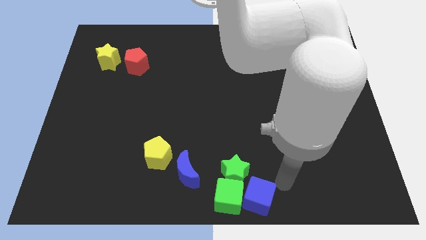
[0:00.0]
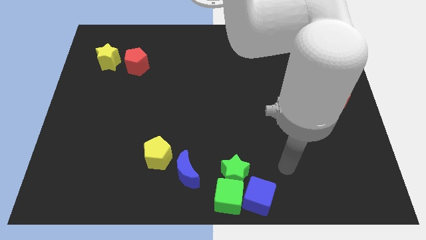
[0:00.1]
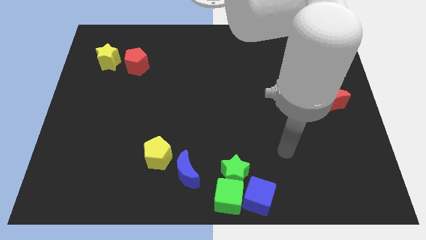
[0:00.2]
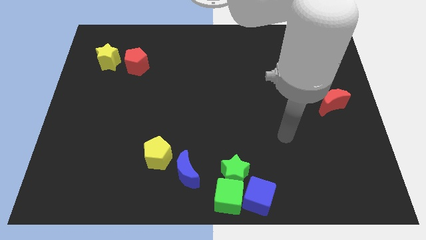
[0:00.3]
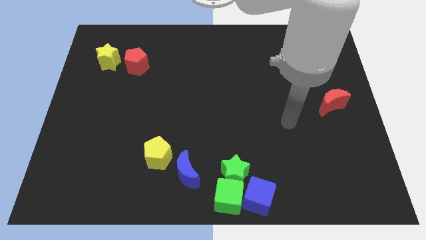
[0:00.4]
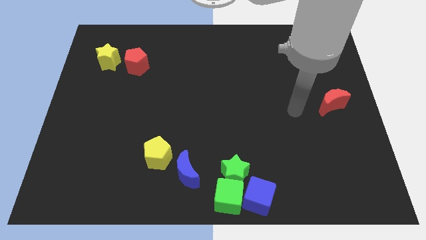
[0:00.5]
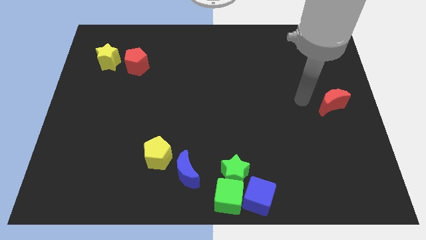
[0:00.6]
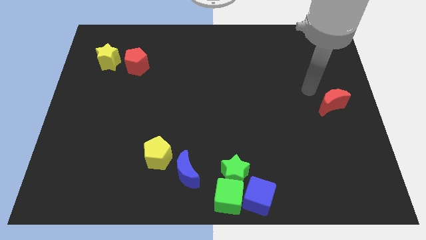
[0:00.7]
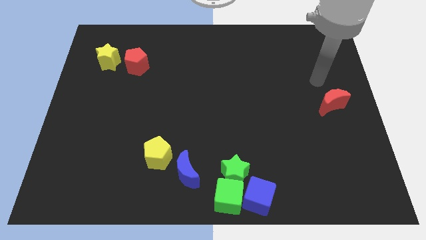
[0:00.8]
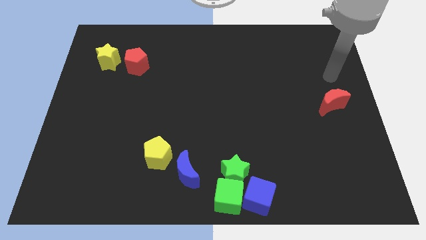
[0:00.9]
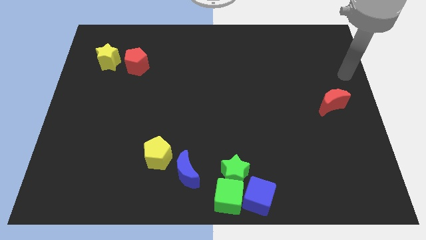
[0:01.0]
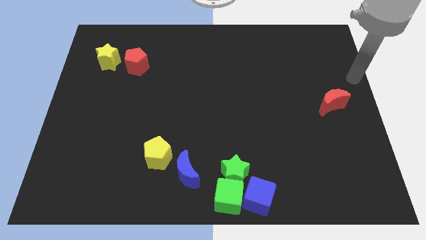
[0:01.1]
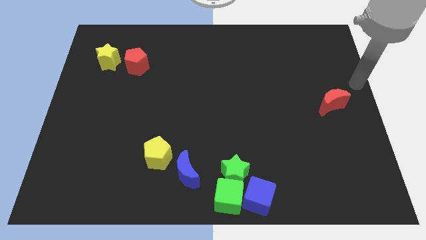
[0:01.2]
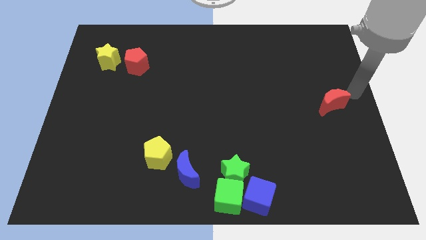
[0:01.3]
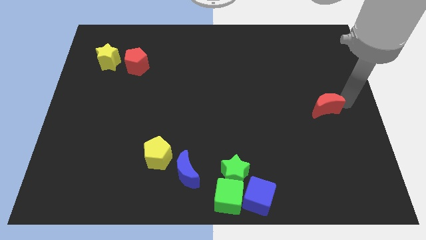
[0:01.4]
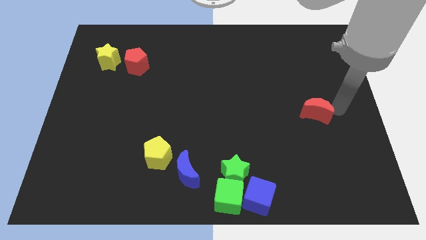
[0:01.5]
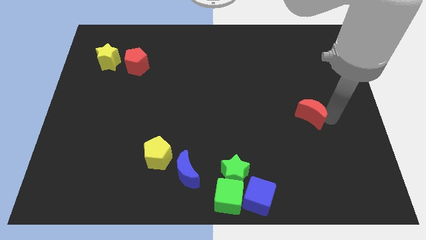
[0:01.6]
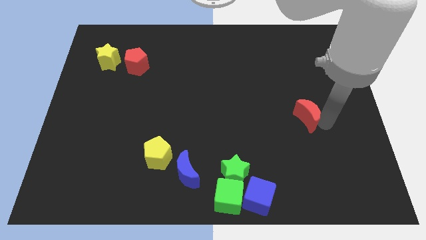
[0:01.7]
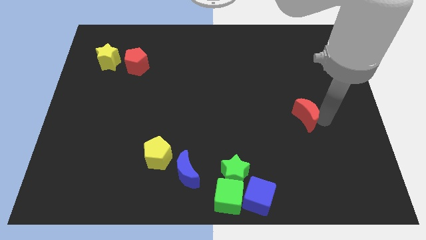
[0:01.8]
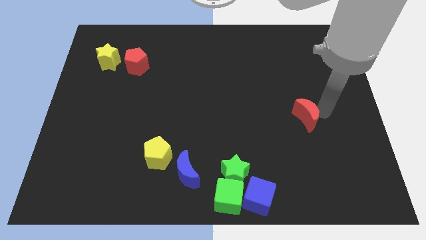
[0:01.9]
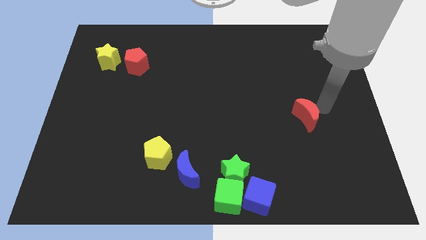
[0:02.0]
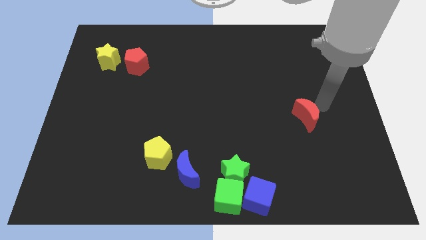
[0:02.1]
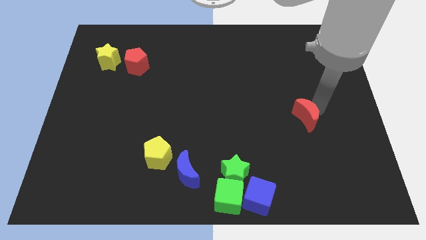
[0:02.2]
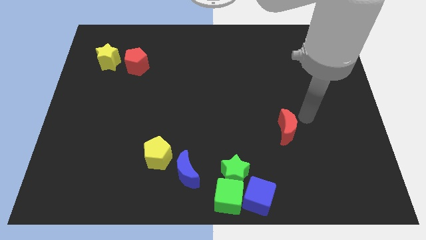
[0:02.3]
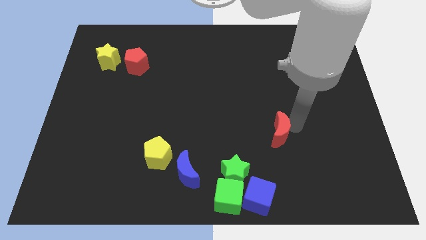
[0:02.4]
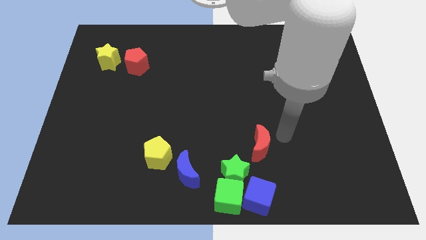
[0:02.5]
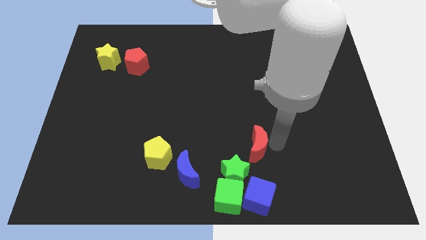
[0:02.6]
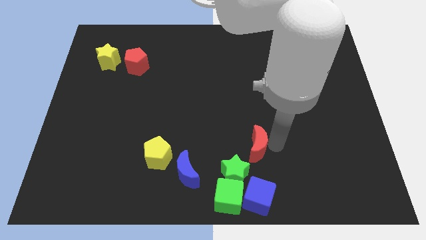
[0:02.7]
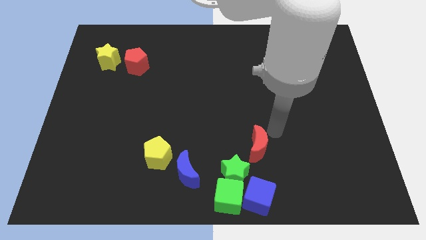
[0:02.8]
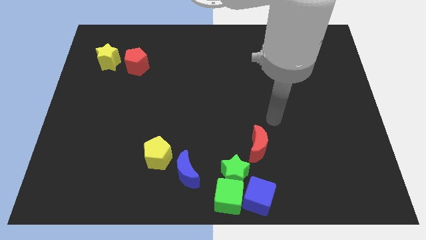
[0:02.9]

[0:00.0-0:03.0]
bring the red crescent near to the green star

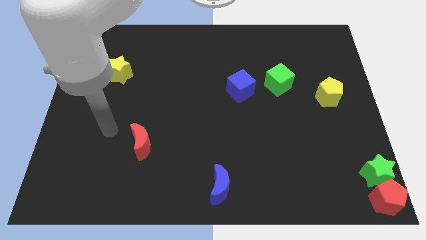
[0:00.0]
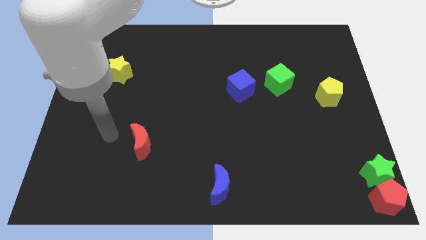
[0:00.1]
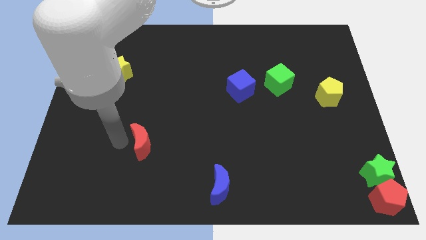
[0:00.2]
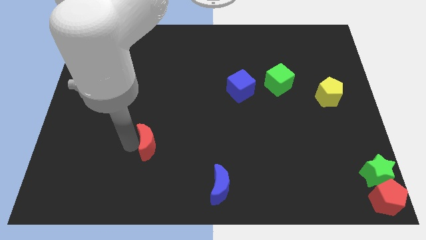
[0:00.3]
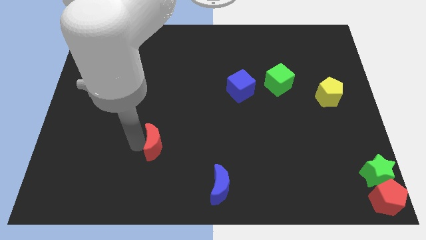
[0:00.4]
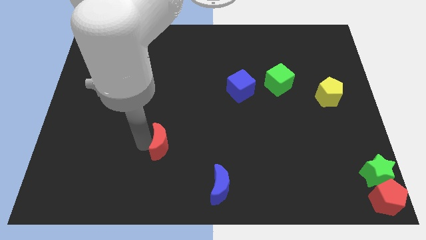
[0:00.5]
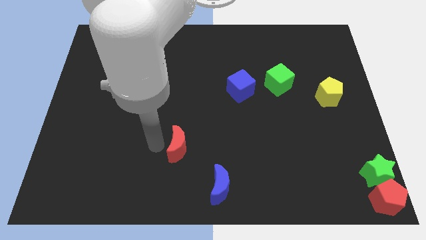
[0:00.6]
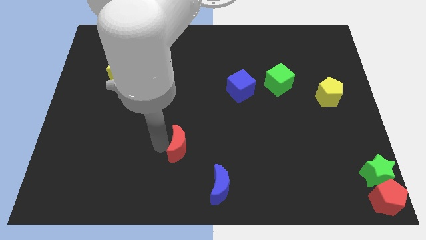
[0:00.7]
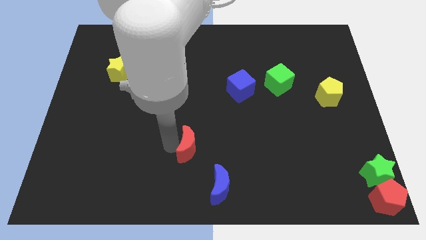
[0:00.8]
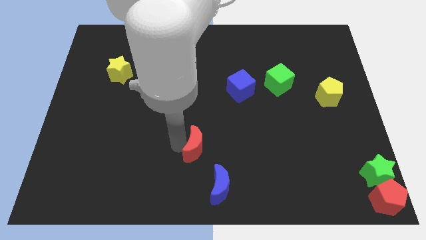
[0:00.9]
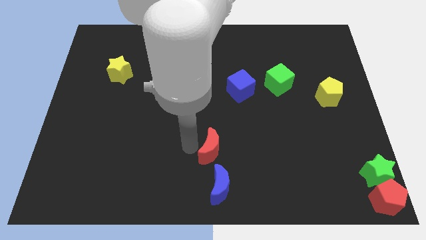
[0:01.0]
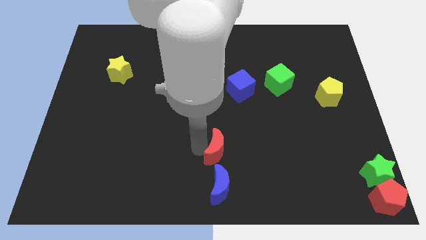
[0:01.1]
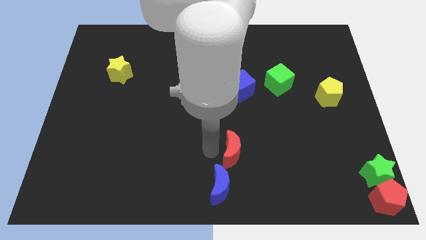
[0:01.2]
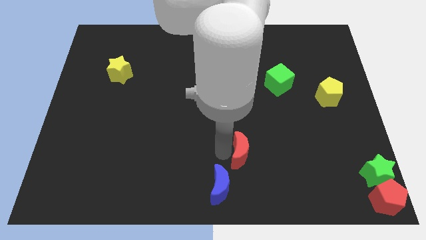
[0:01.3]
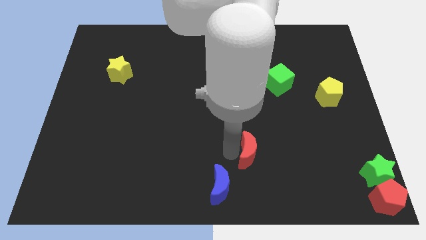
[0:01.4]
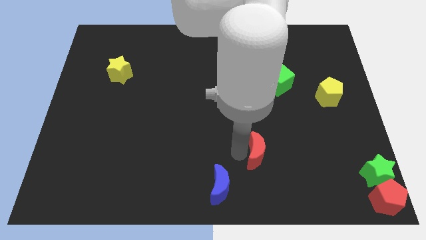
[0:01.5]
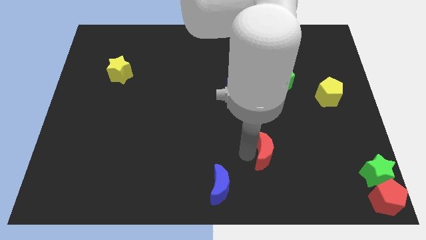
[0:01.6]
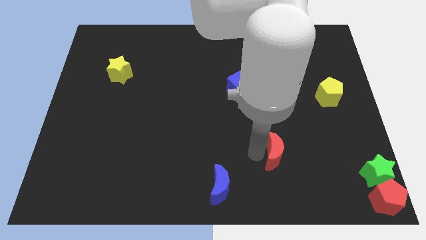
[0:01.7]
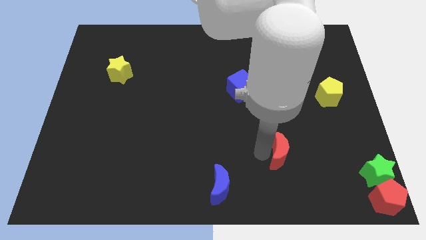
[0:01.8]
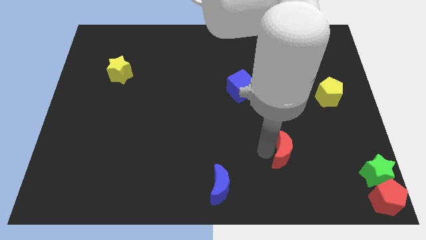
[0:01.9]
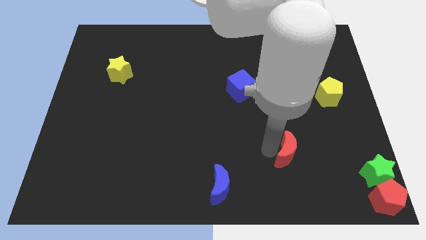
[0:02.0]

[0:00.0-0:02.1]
move the red moon towards the bottom right of the board

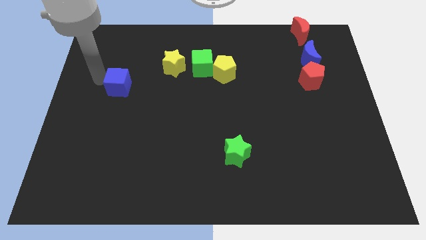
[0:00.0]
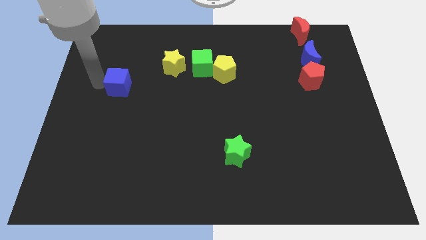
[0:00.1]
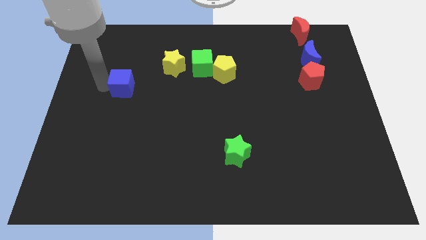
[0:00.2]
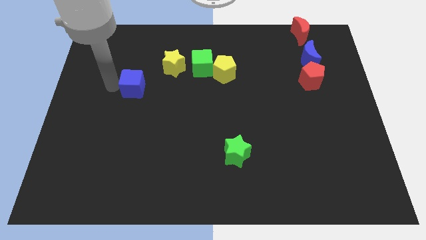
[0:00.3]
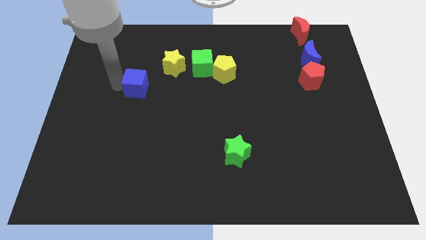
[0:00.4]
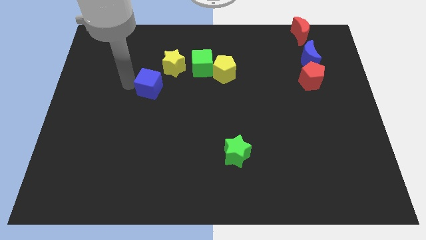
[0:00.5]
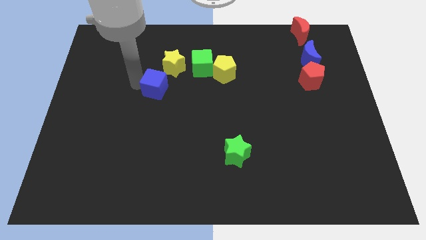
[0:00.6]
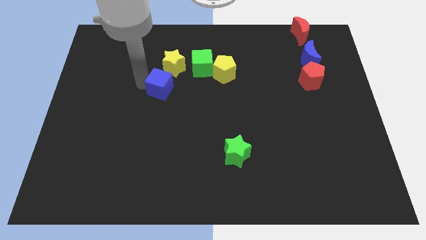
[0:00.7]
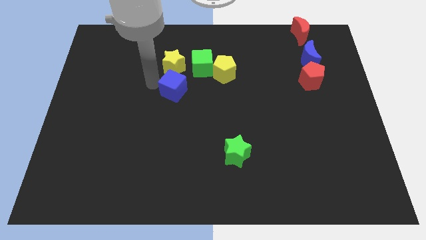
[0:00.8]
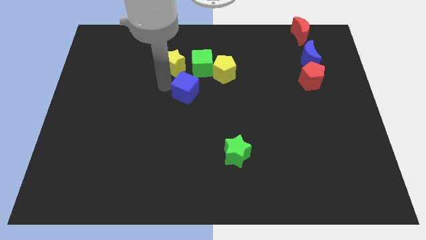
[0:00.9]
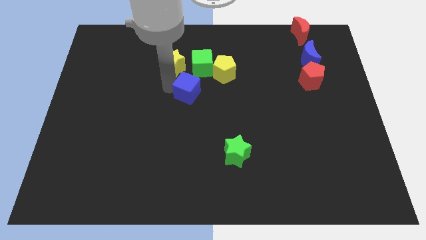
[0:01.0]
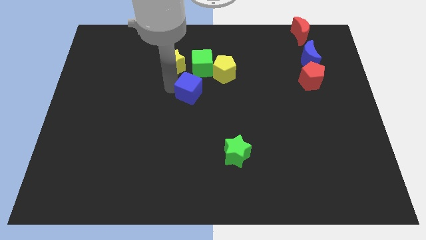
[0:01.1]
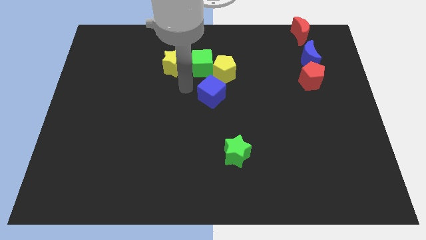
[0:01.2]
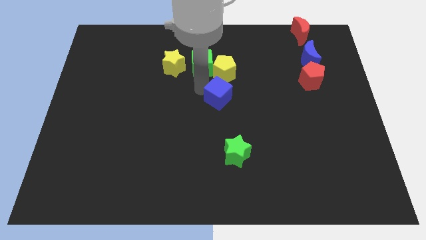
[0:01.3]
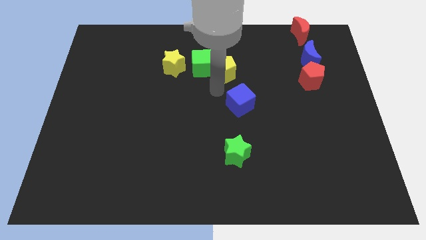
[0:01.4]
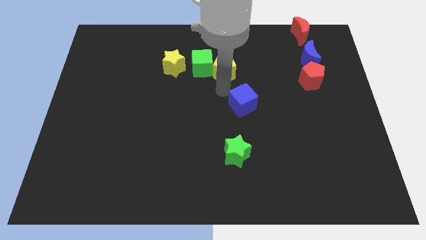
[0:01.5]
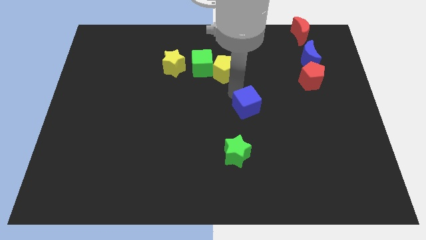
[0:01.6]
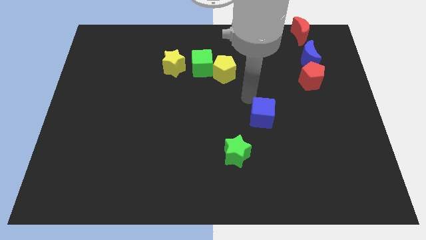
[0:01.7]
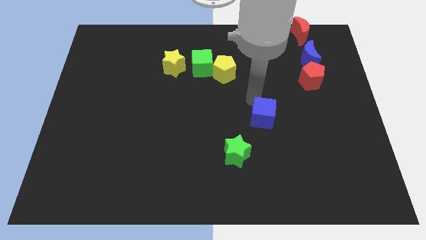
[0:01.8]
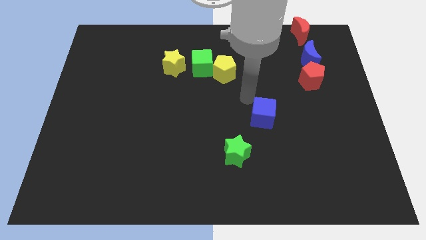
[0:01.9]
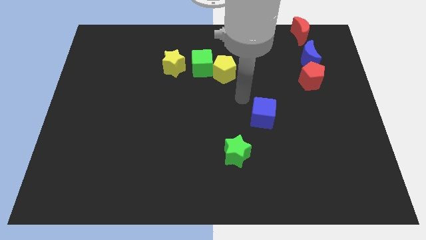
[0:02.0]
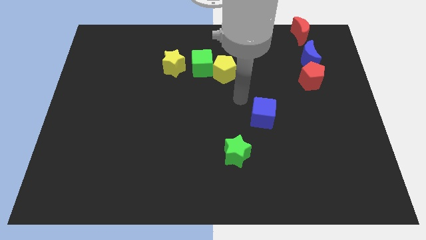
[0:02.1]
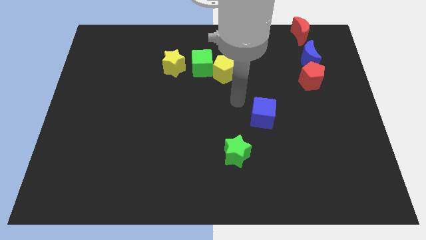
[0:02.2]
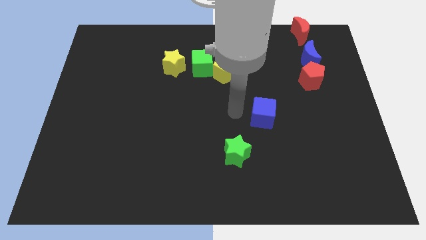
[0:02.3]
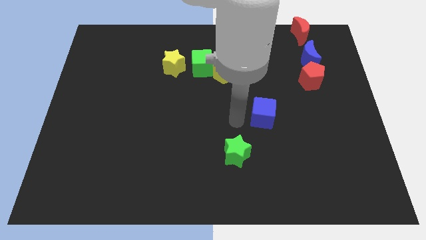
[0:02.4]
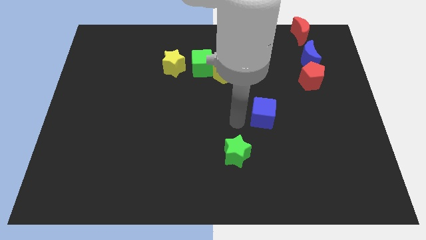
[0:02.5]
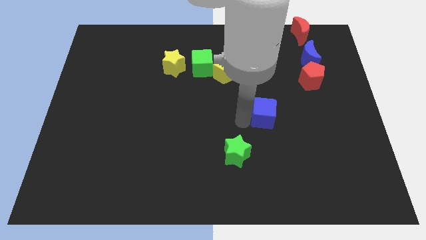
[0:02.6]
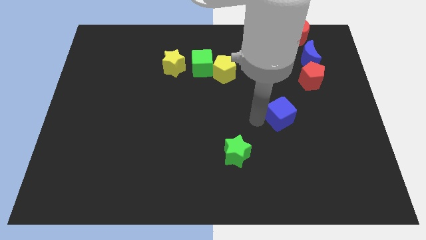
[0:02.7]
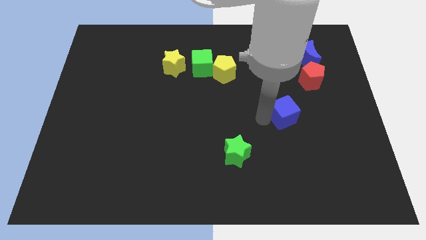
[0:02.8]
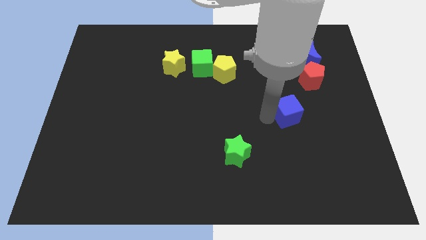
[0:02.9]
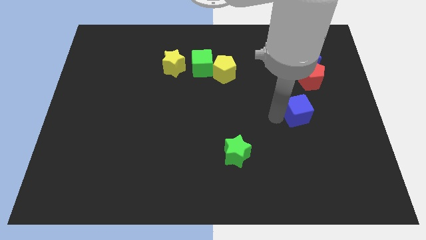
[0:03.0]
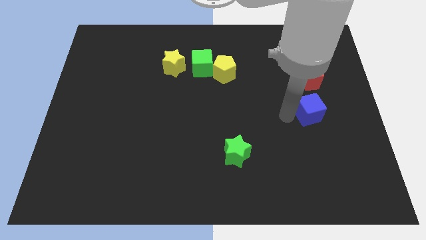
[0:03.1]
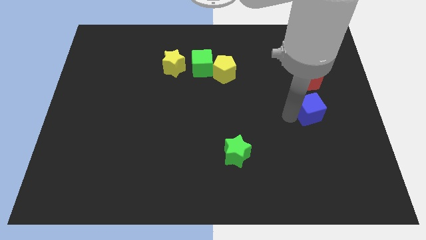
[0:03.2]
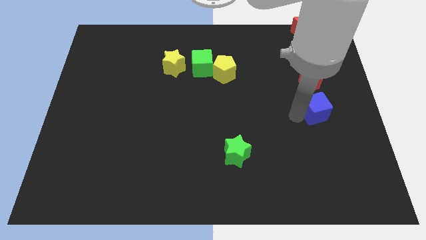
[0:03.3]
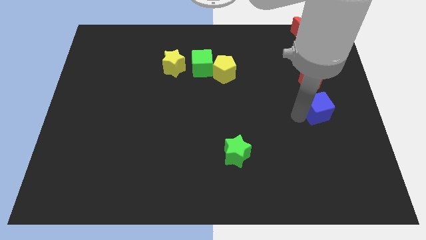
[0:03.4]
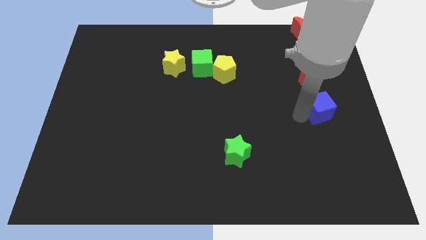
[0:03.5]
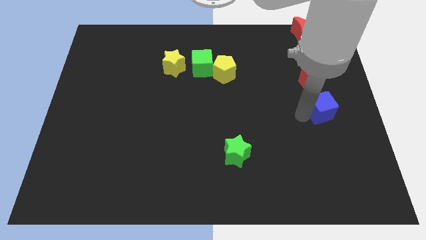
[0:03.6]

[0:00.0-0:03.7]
move the blue cube below the red pentagon

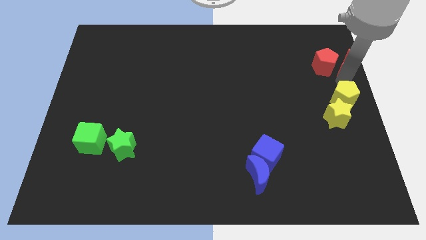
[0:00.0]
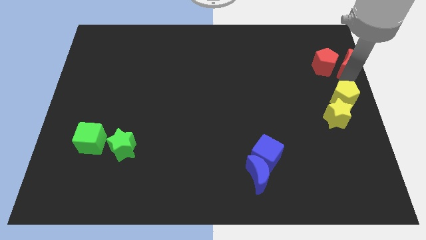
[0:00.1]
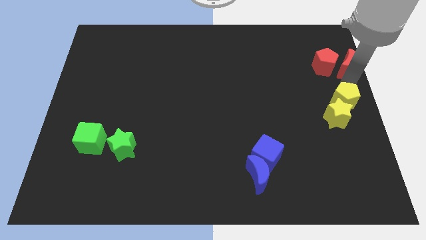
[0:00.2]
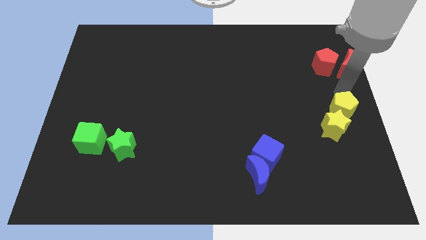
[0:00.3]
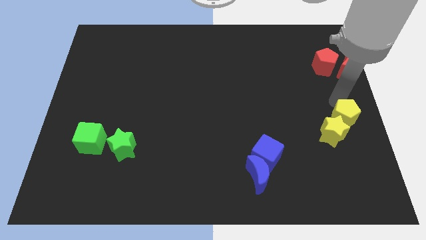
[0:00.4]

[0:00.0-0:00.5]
push the yellow pentagon into the yellow star
